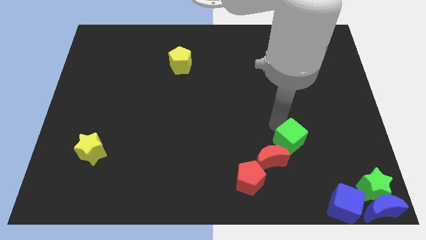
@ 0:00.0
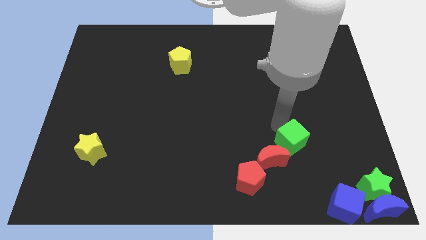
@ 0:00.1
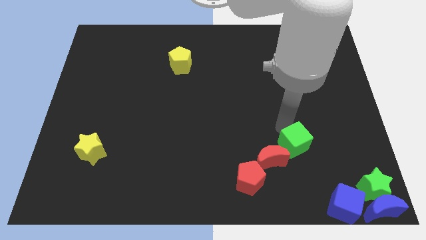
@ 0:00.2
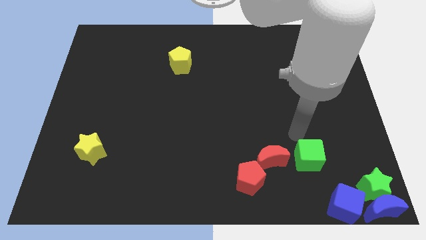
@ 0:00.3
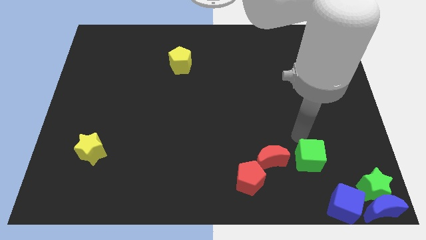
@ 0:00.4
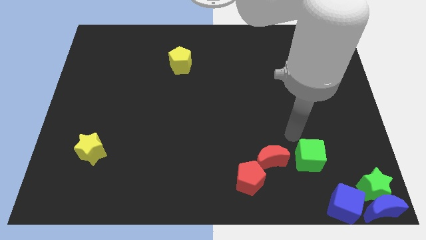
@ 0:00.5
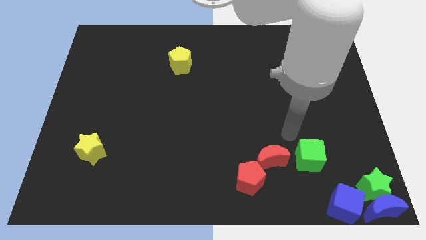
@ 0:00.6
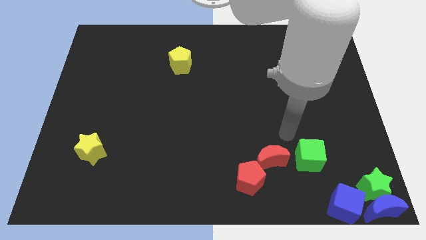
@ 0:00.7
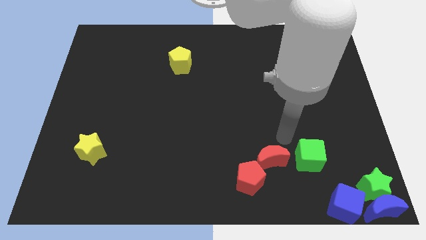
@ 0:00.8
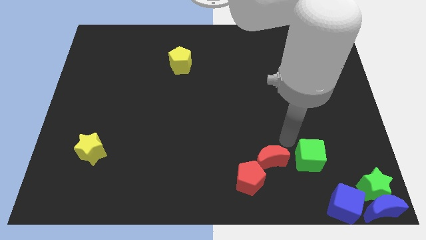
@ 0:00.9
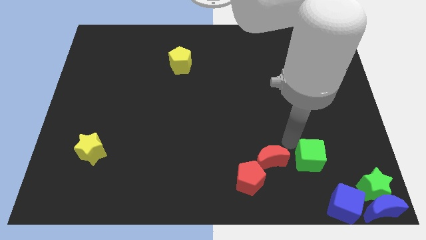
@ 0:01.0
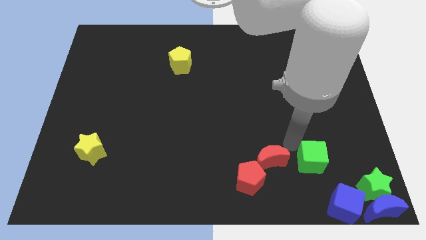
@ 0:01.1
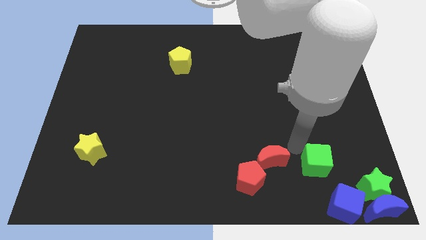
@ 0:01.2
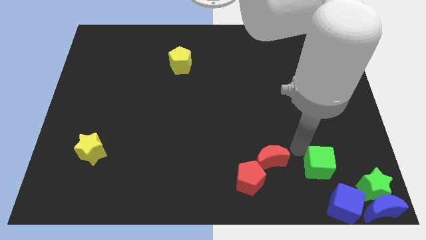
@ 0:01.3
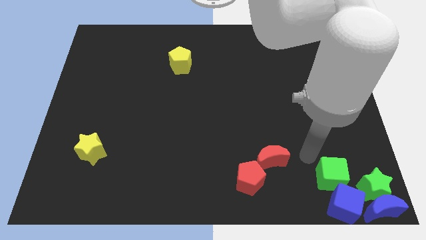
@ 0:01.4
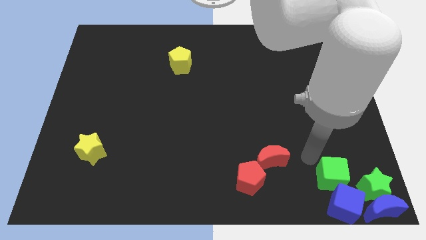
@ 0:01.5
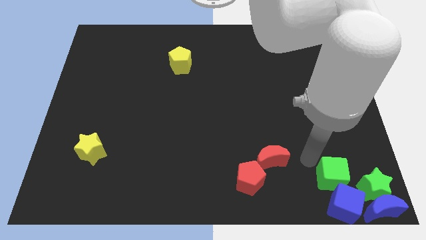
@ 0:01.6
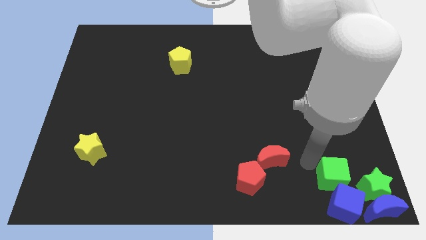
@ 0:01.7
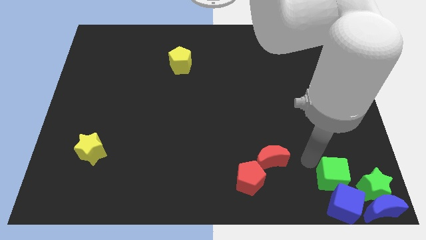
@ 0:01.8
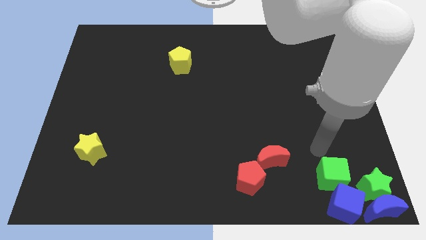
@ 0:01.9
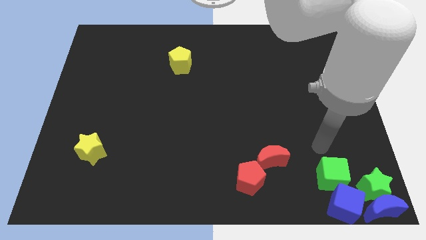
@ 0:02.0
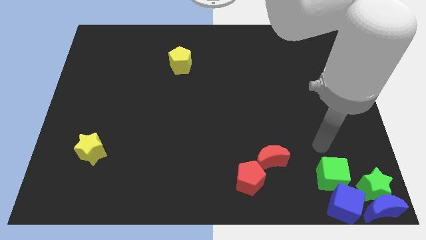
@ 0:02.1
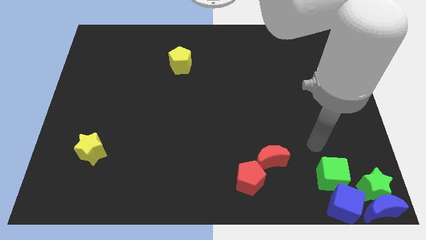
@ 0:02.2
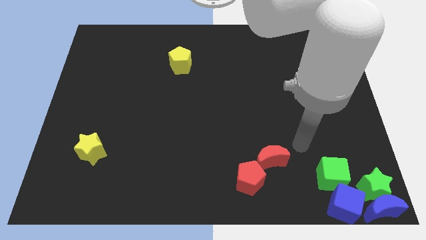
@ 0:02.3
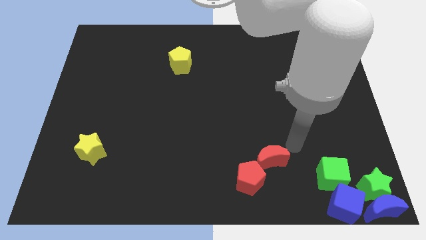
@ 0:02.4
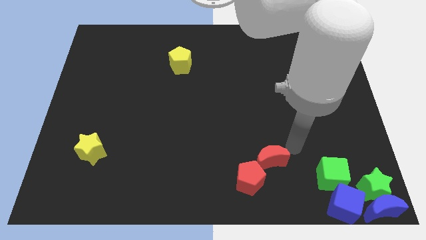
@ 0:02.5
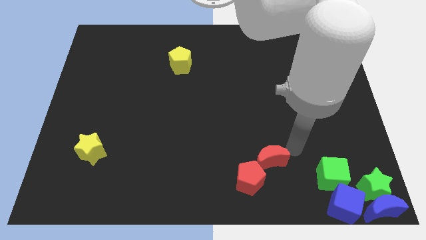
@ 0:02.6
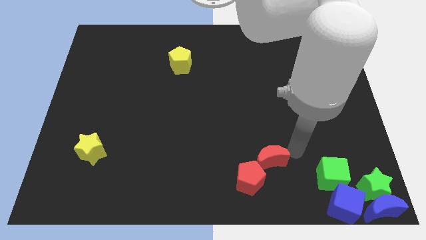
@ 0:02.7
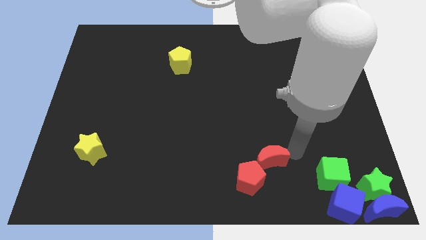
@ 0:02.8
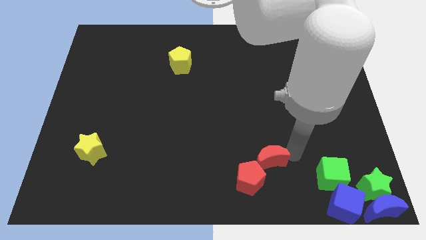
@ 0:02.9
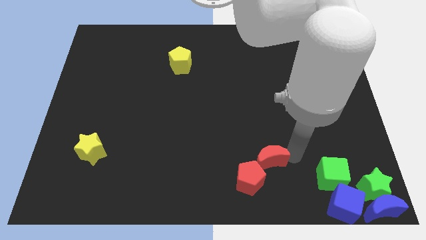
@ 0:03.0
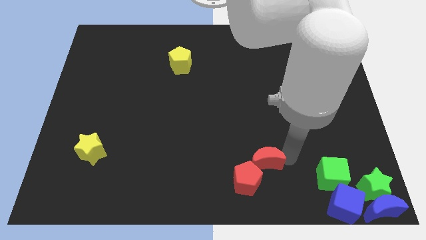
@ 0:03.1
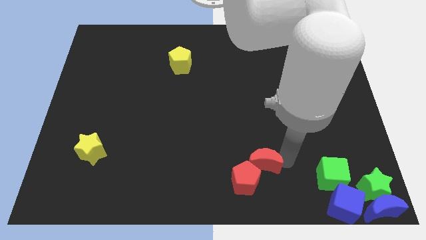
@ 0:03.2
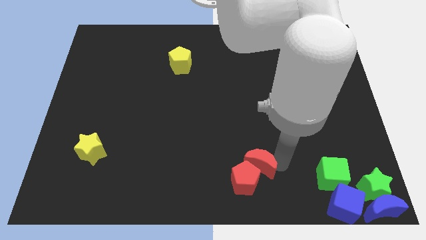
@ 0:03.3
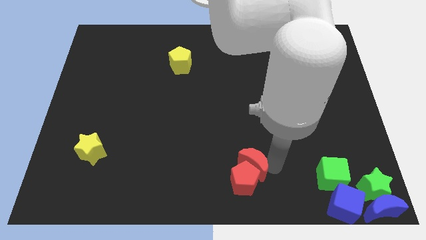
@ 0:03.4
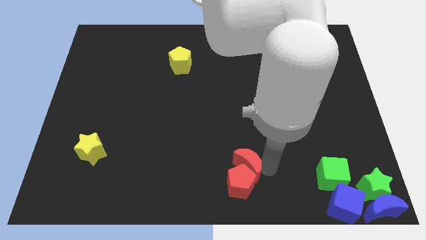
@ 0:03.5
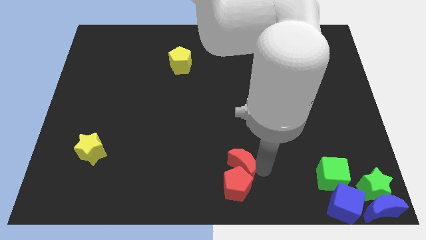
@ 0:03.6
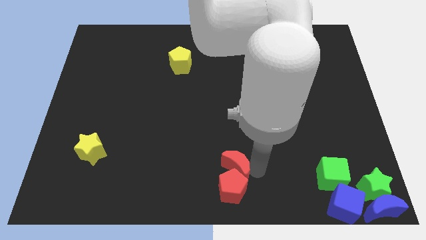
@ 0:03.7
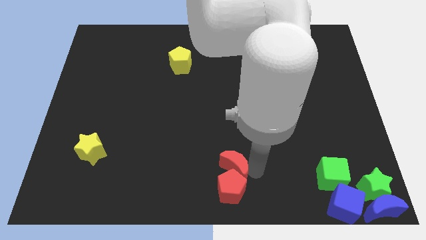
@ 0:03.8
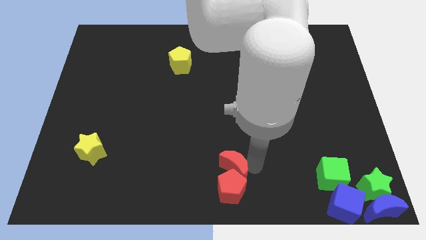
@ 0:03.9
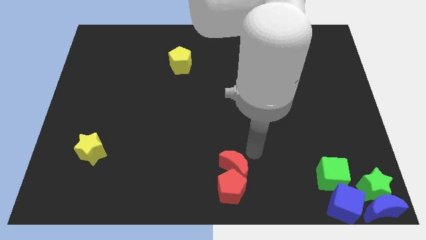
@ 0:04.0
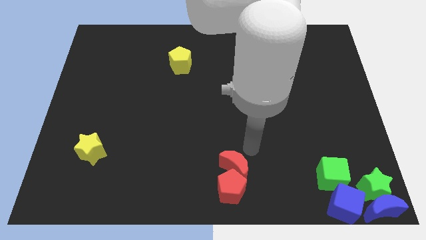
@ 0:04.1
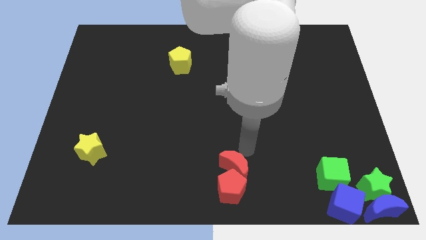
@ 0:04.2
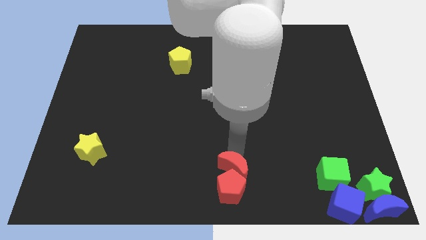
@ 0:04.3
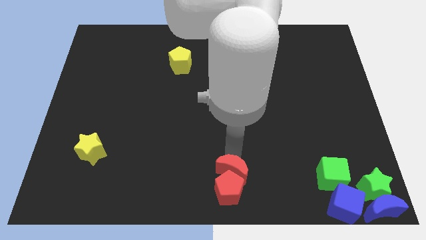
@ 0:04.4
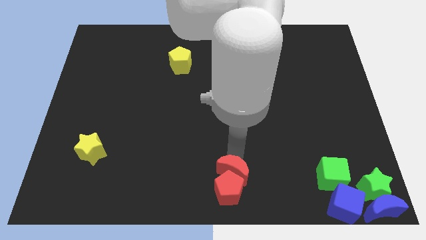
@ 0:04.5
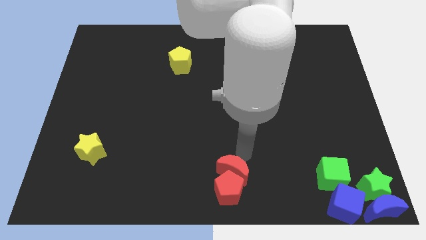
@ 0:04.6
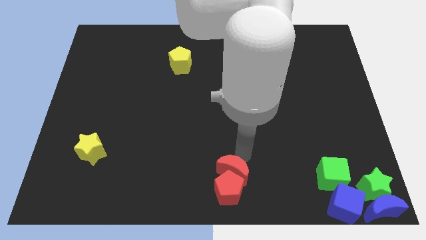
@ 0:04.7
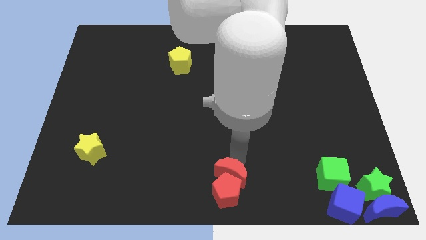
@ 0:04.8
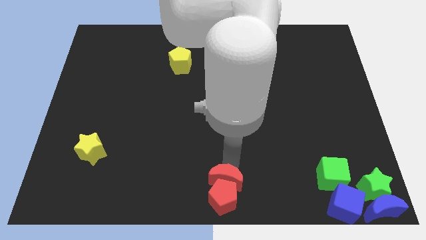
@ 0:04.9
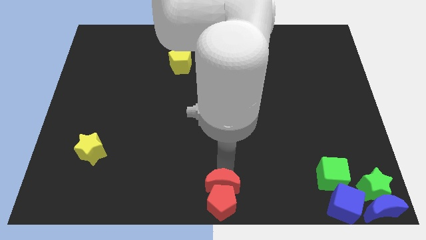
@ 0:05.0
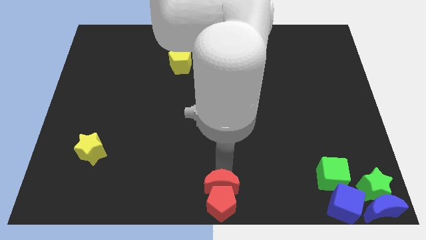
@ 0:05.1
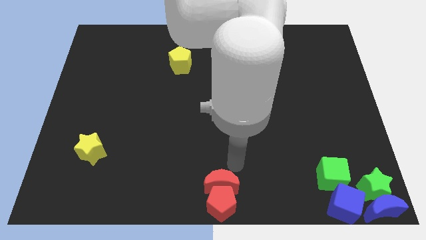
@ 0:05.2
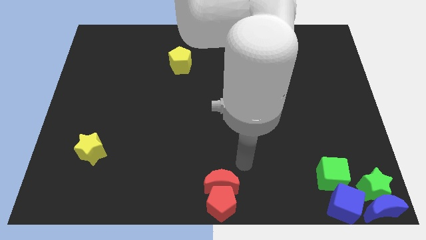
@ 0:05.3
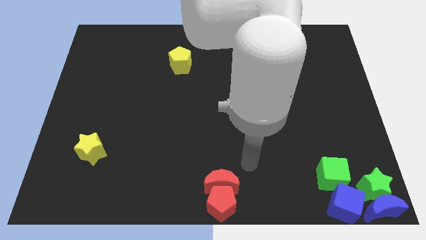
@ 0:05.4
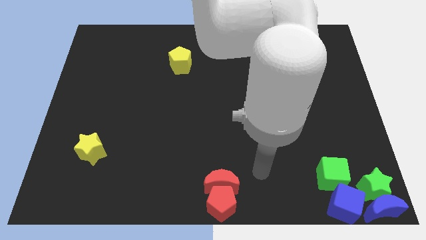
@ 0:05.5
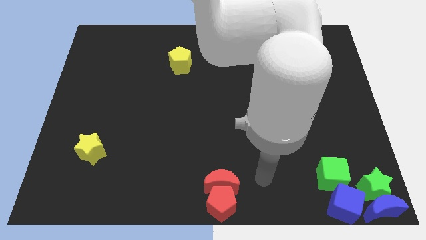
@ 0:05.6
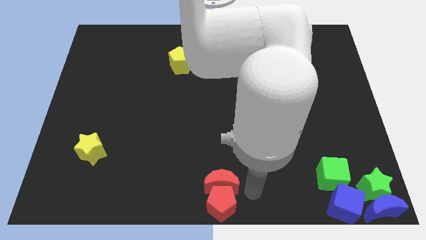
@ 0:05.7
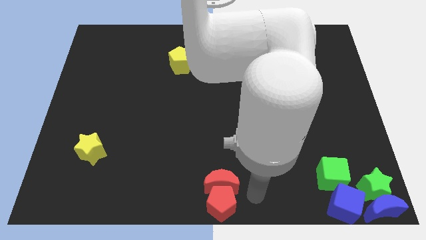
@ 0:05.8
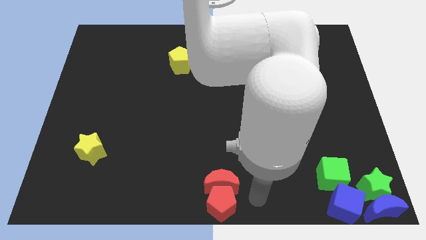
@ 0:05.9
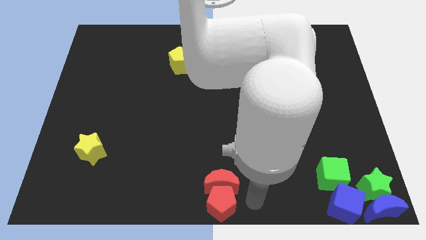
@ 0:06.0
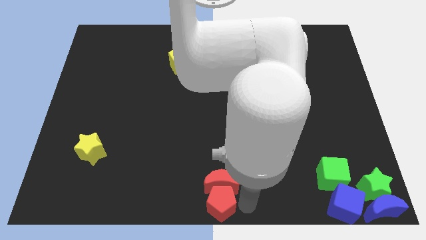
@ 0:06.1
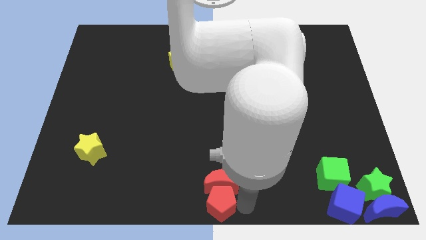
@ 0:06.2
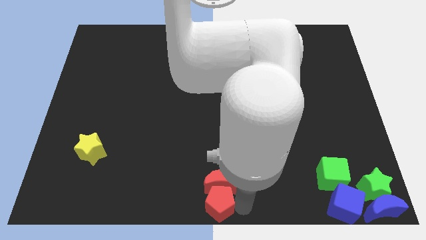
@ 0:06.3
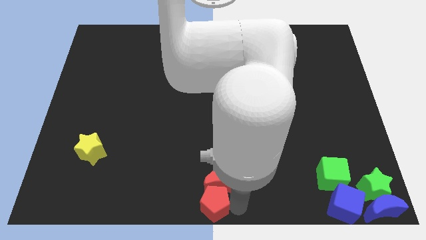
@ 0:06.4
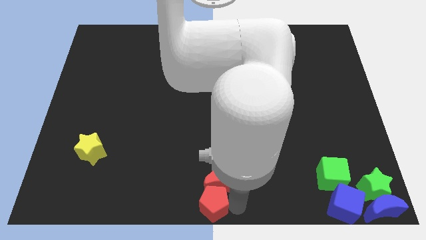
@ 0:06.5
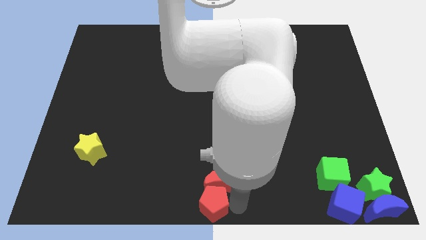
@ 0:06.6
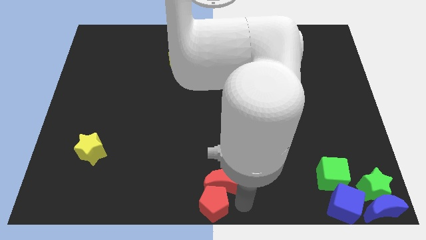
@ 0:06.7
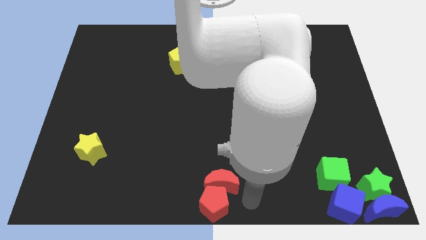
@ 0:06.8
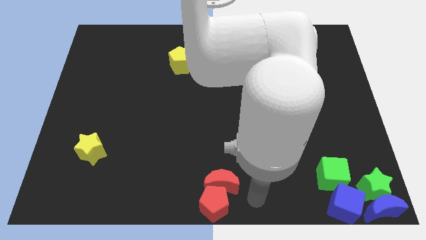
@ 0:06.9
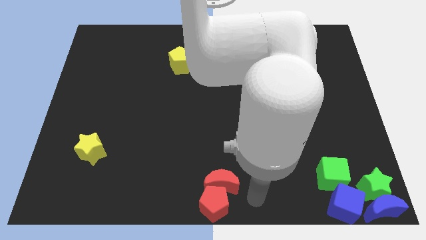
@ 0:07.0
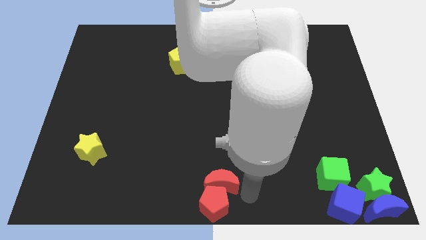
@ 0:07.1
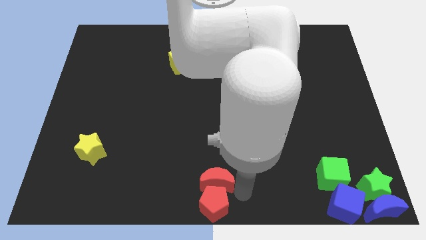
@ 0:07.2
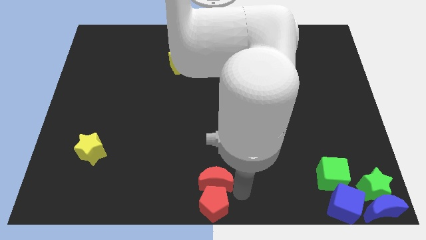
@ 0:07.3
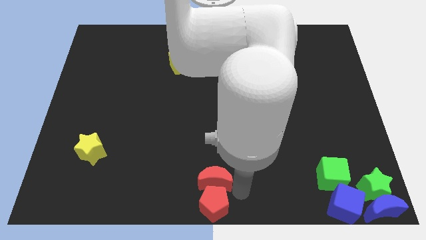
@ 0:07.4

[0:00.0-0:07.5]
drag both the red blocks at the bottom center

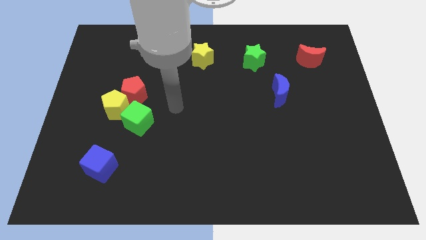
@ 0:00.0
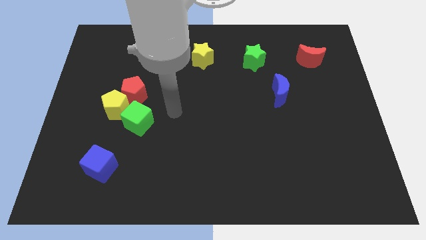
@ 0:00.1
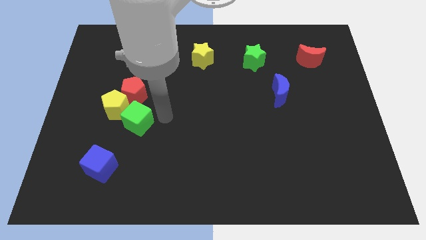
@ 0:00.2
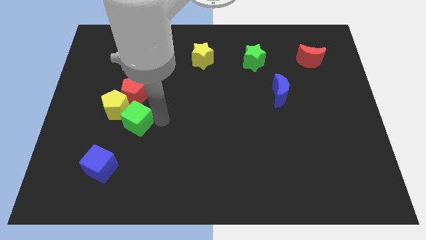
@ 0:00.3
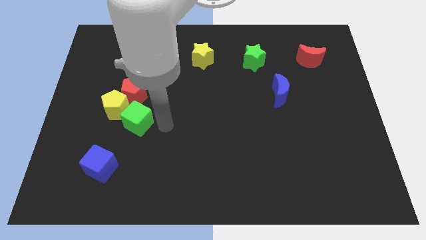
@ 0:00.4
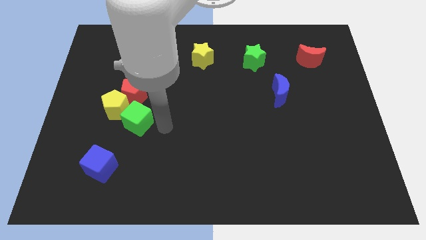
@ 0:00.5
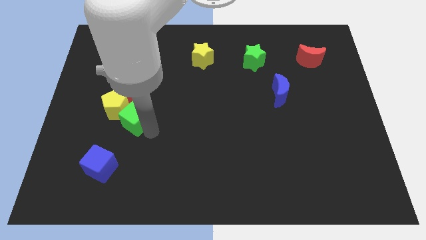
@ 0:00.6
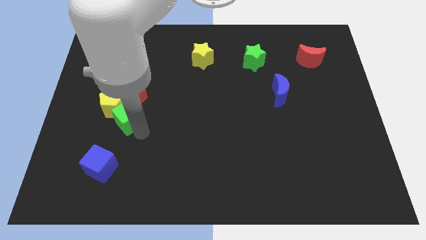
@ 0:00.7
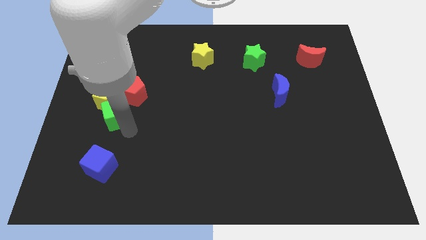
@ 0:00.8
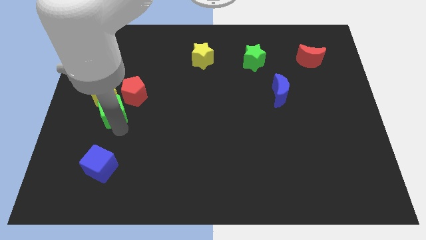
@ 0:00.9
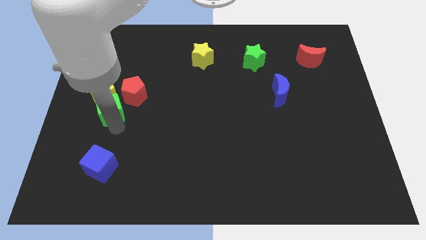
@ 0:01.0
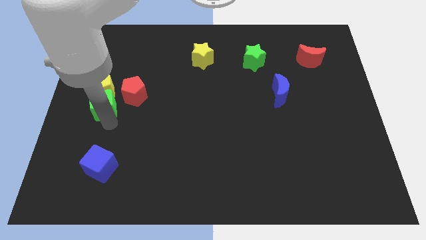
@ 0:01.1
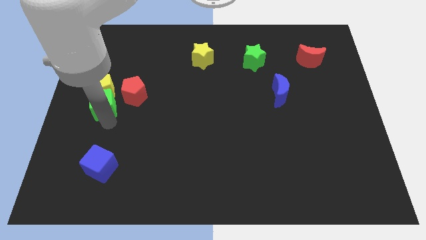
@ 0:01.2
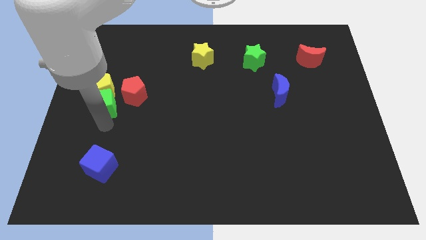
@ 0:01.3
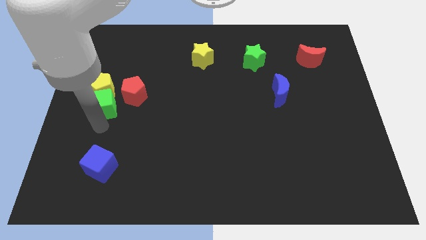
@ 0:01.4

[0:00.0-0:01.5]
place the green cube vertically below the yellow pentagon
